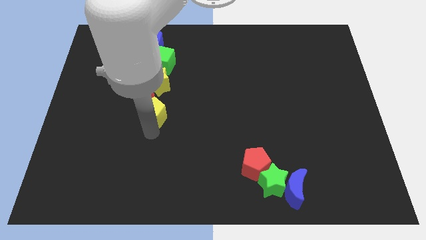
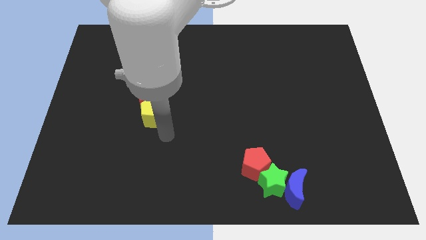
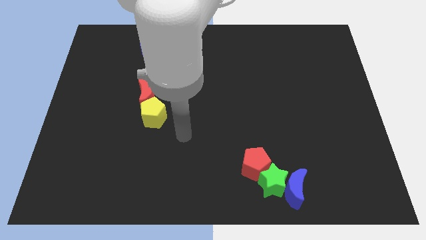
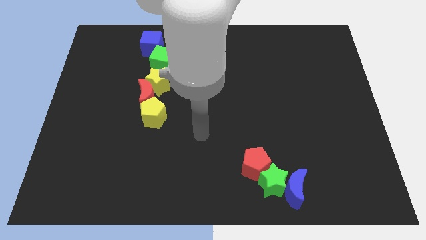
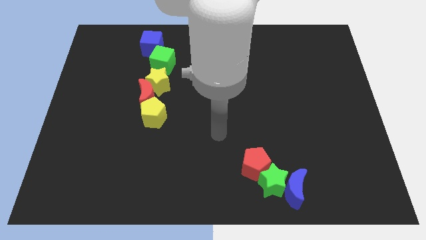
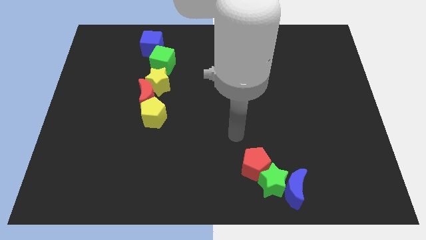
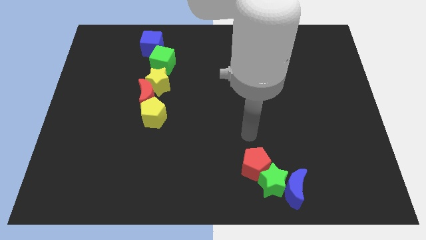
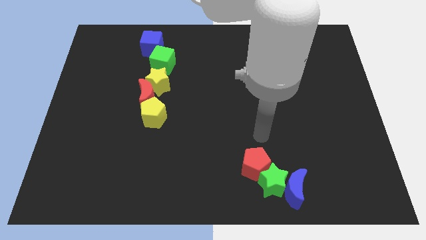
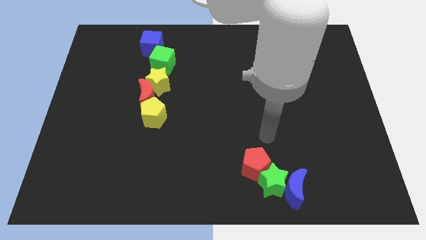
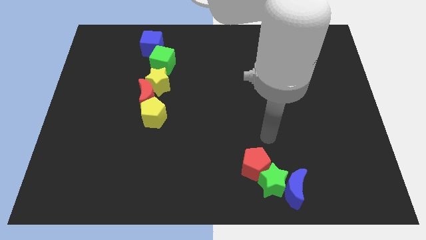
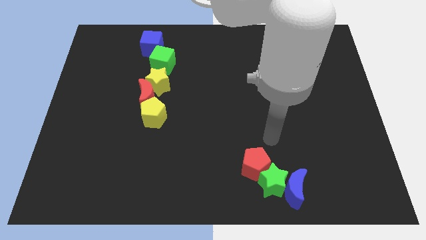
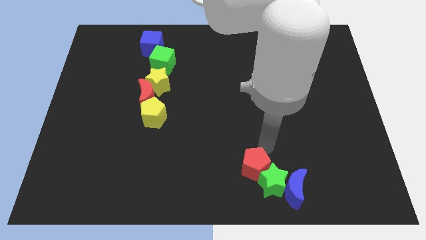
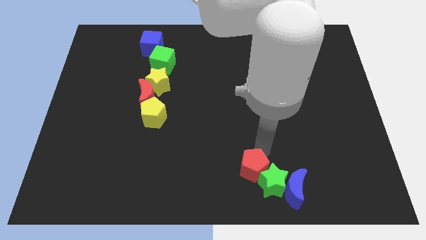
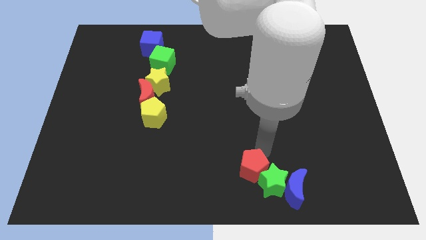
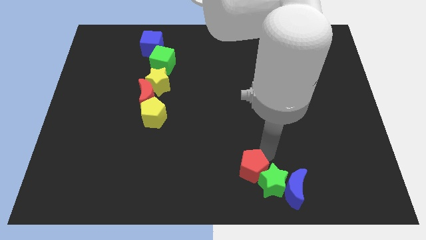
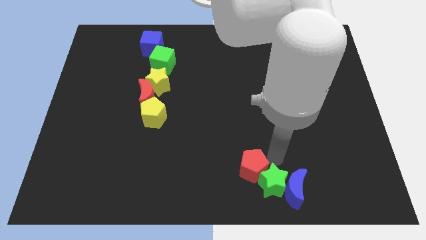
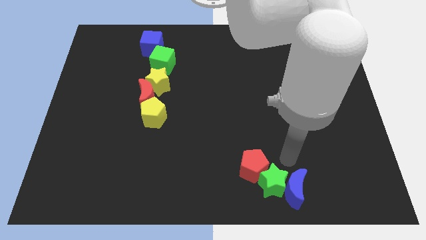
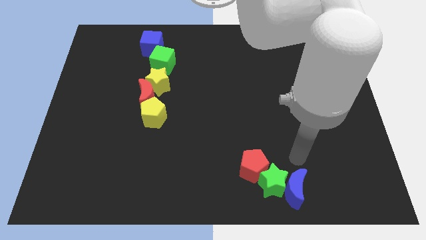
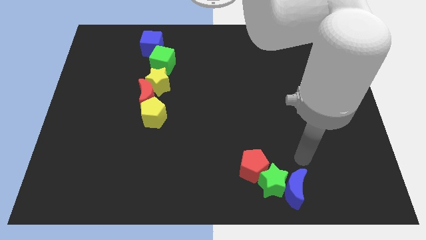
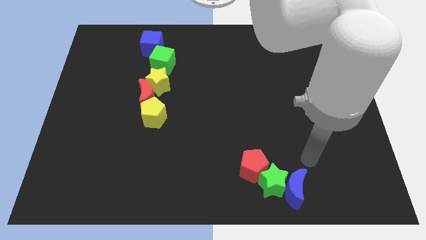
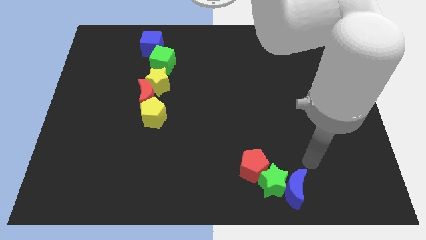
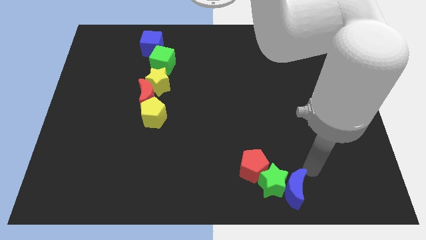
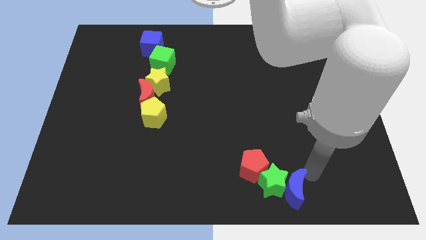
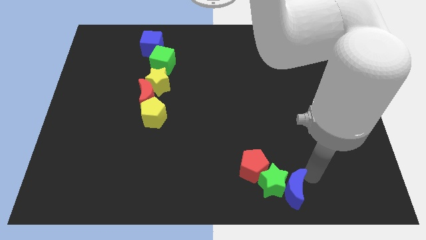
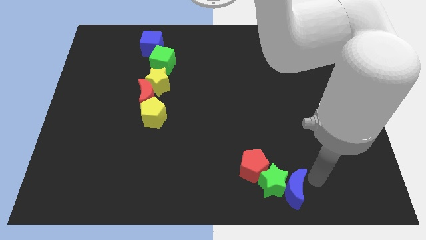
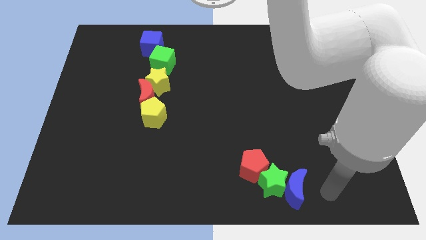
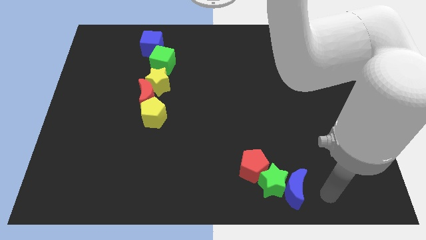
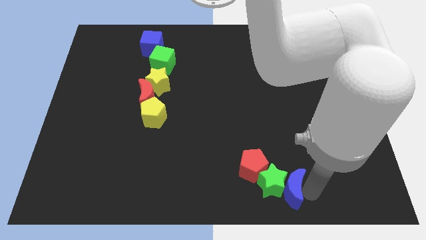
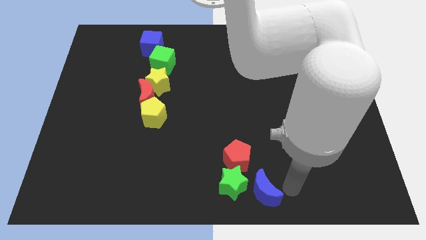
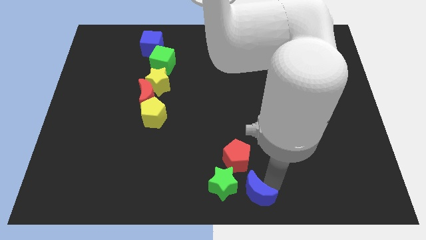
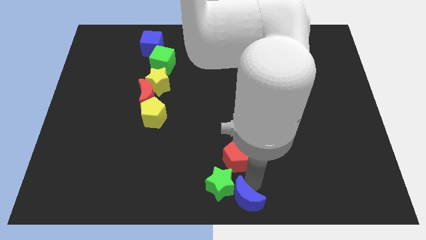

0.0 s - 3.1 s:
move the green star and the blue crescent slightly to the left

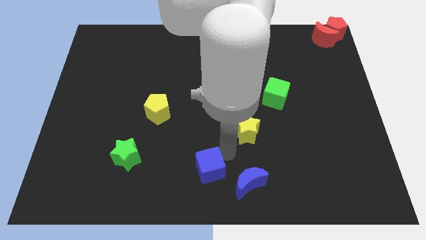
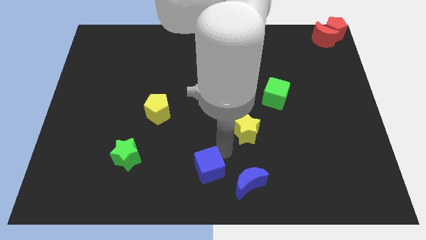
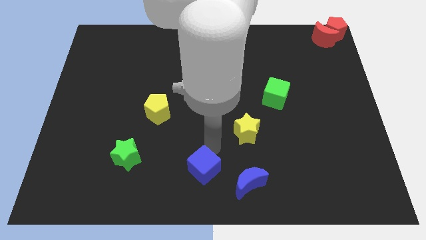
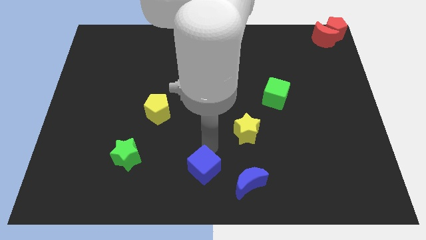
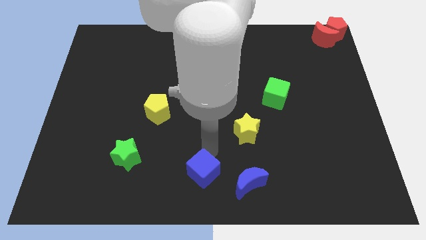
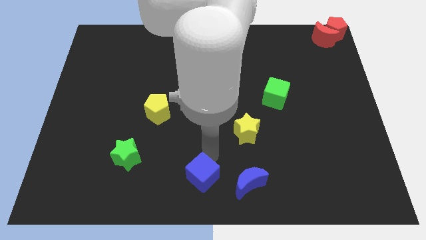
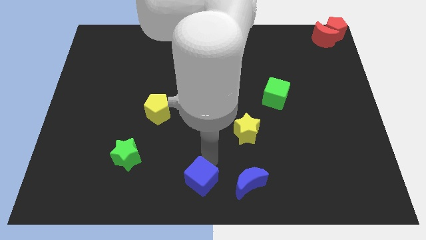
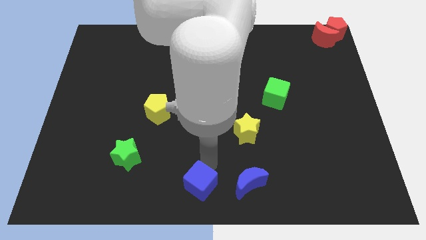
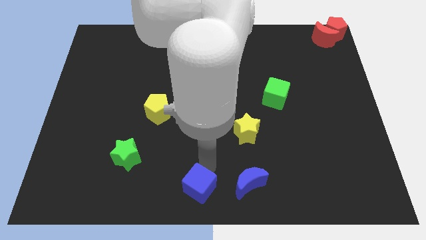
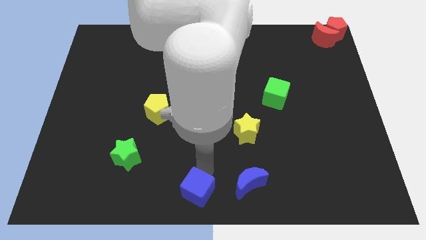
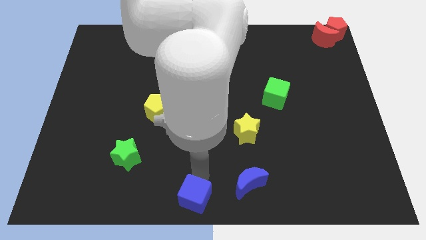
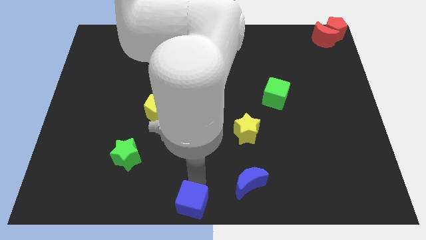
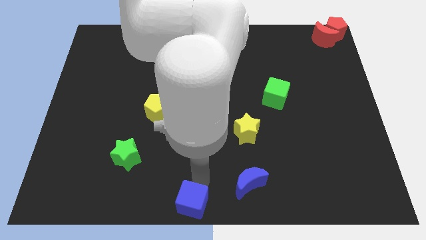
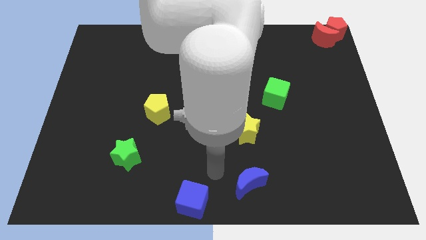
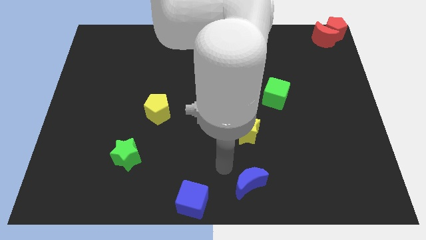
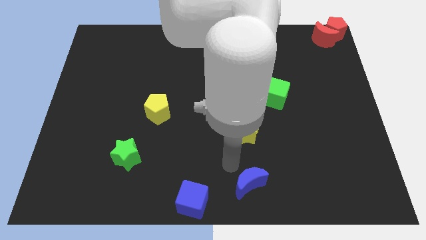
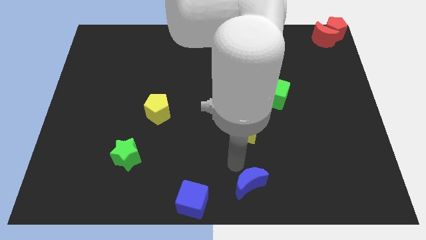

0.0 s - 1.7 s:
push the blue cube to the bottom of the board

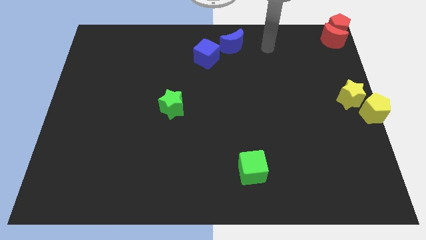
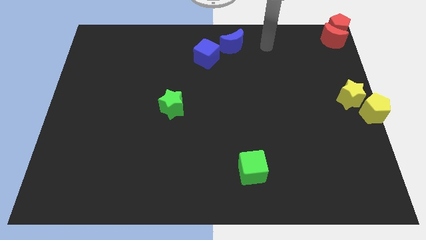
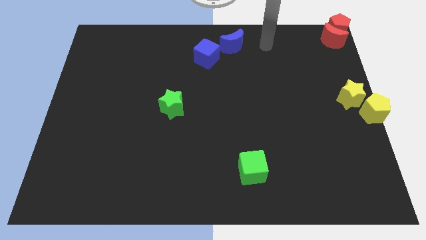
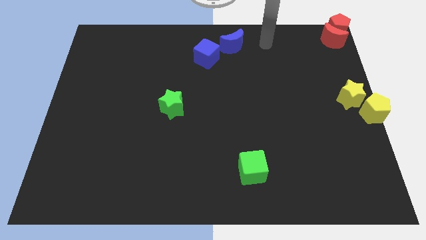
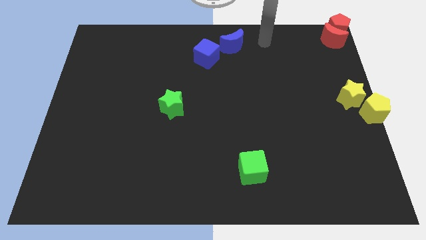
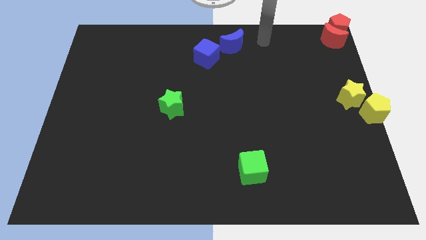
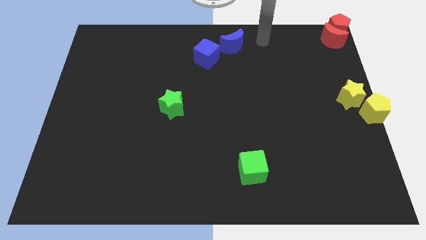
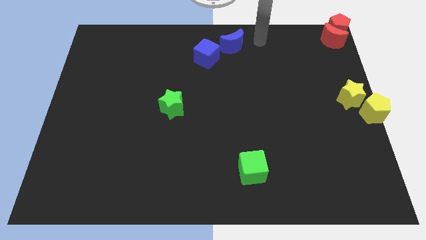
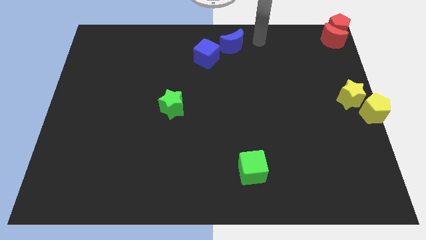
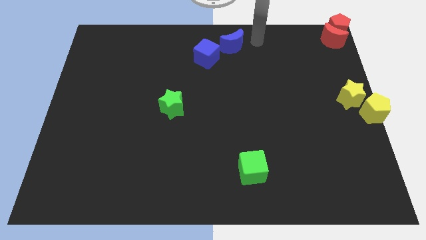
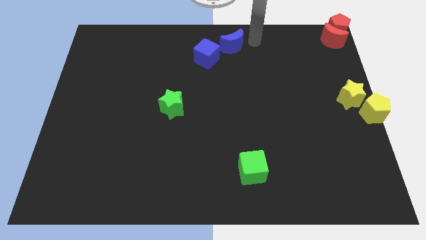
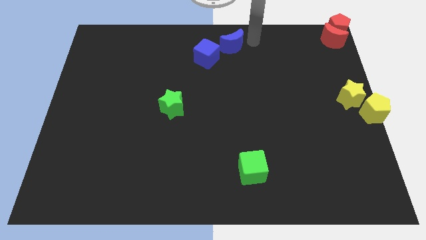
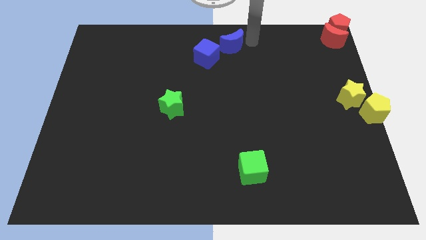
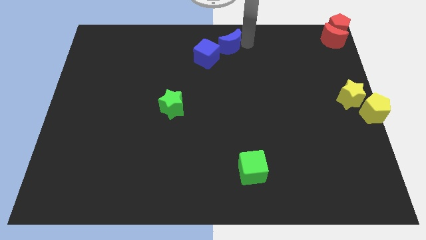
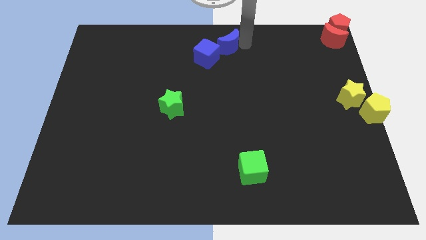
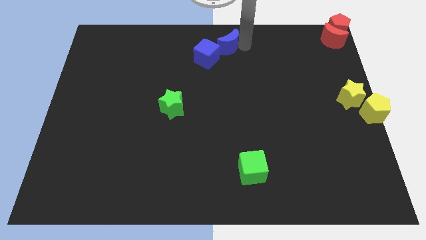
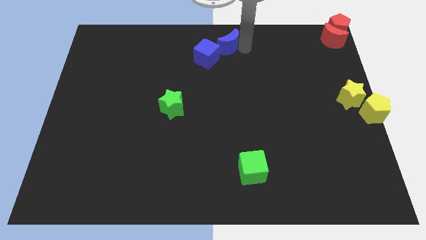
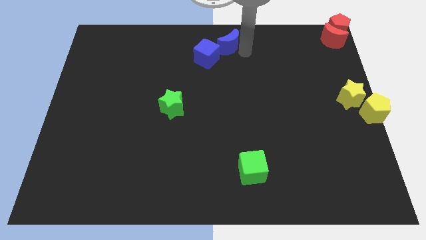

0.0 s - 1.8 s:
move your arm towards the blue crescent

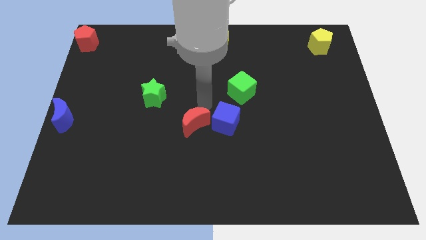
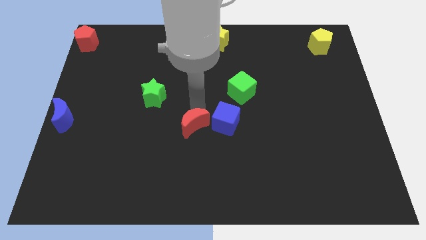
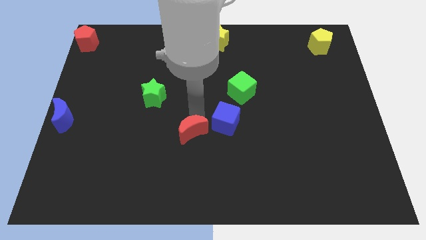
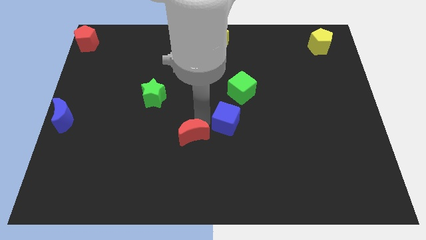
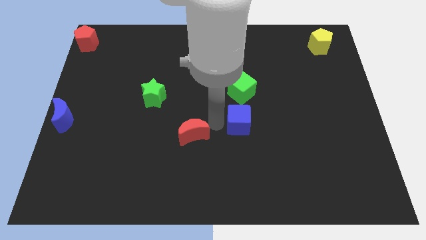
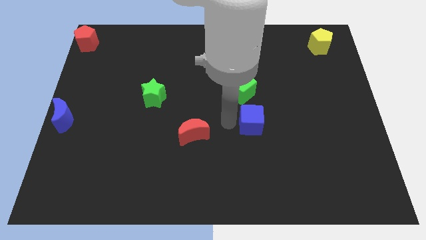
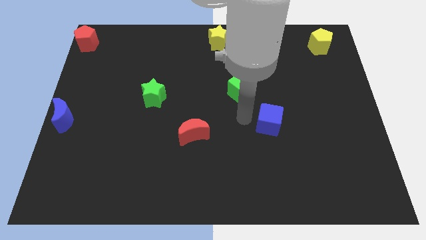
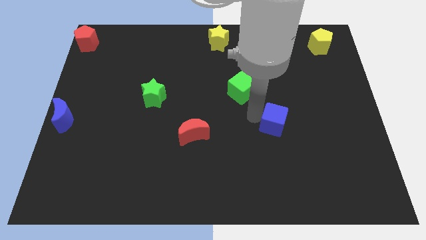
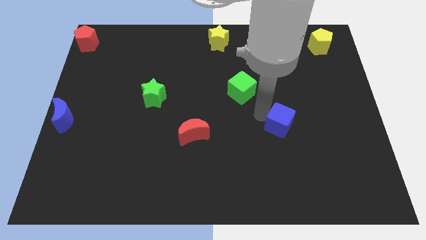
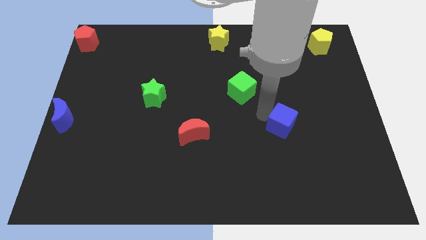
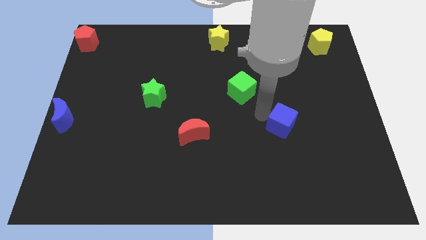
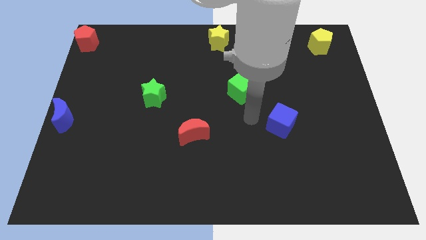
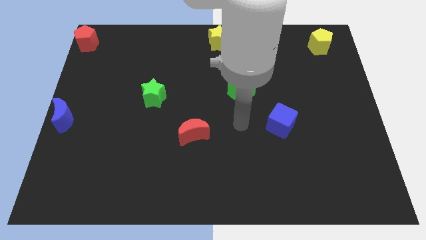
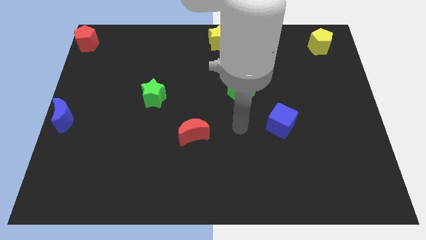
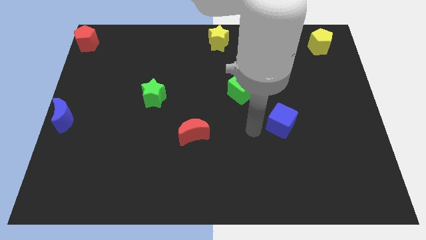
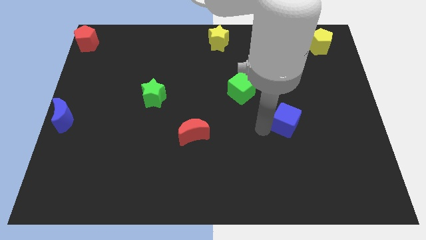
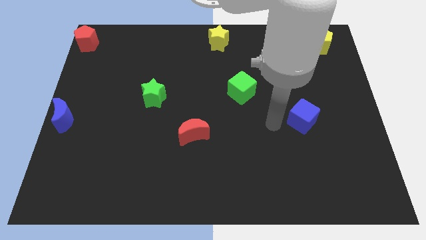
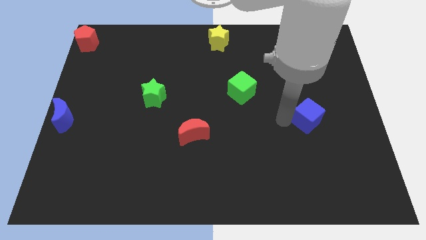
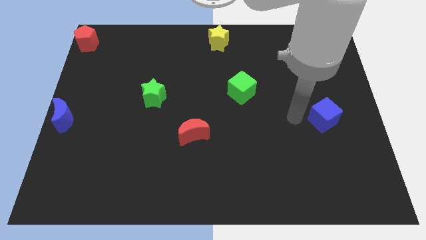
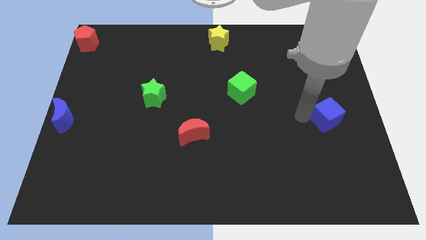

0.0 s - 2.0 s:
slightly move the blue cube towards the right center of the board

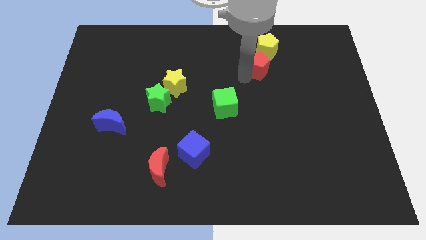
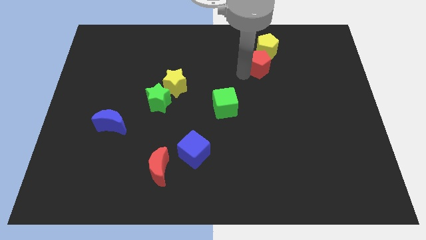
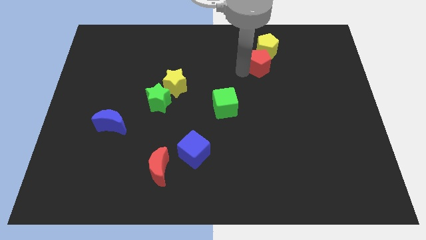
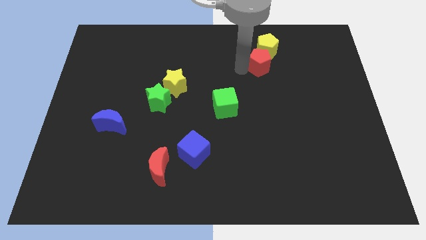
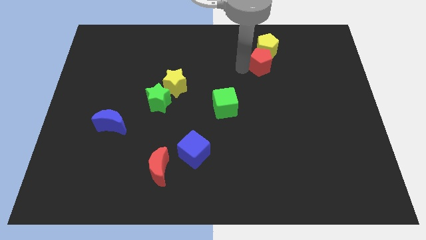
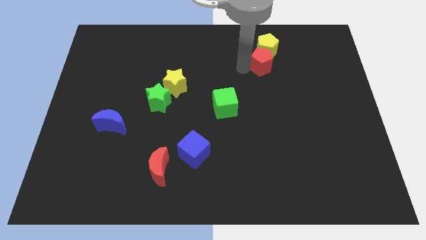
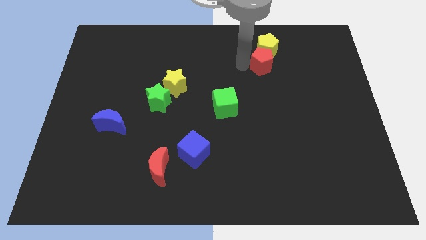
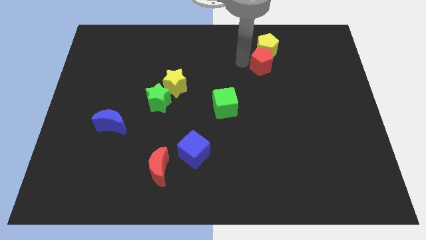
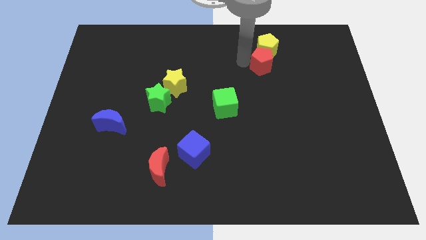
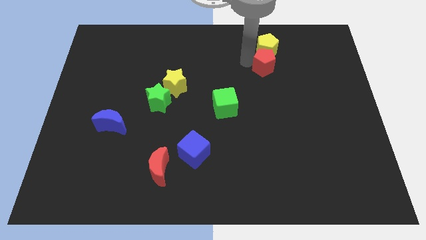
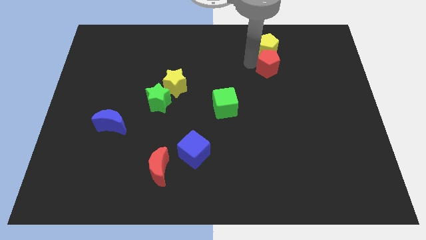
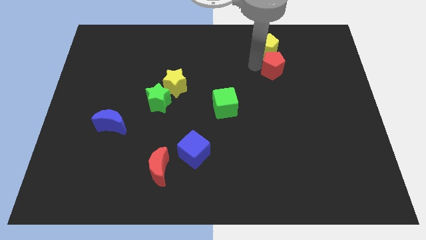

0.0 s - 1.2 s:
move the red pentagon to the bottom side of the yellow pentagon
